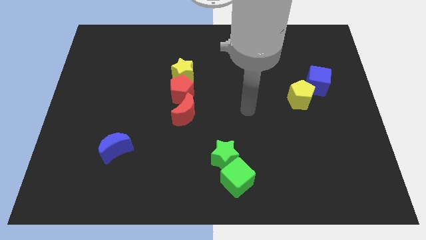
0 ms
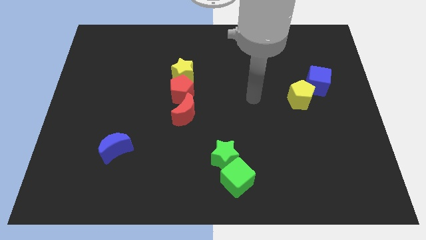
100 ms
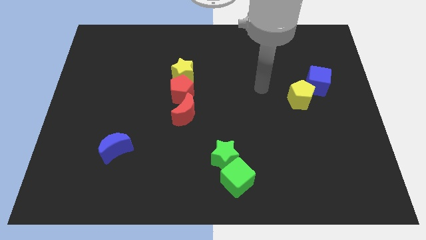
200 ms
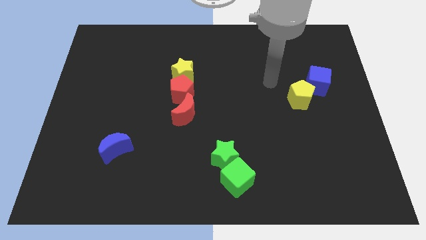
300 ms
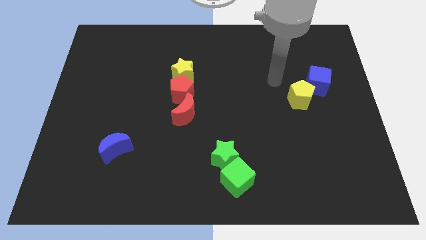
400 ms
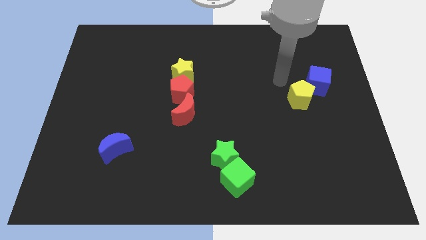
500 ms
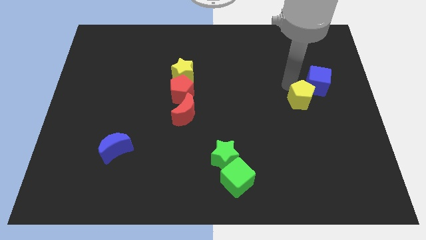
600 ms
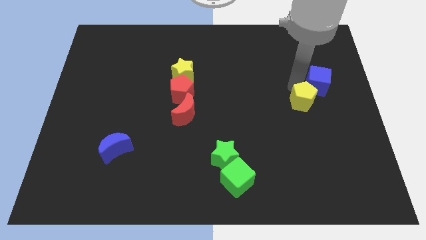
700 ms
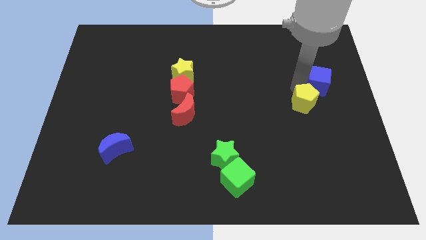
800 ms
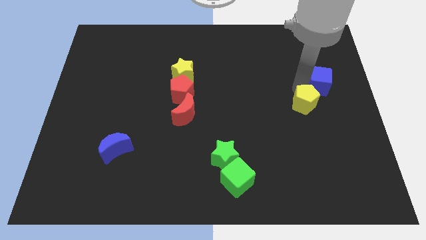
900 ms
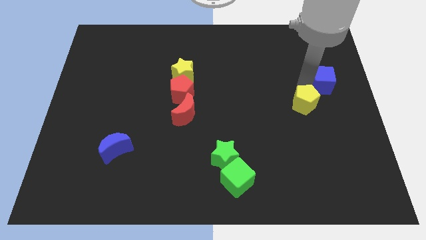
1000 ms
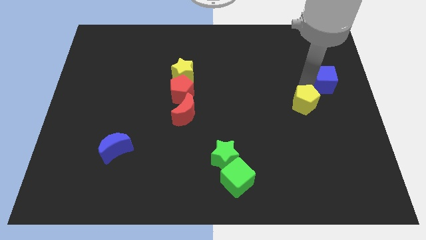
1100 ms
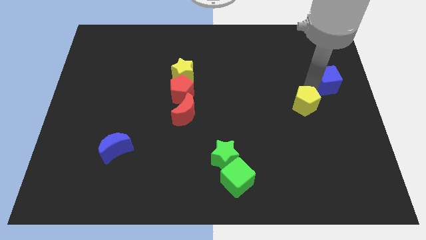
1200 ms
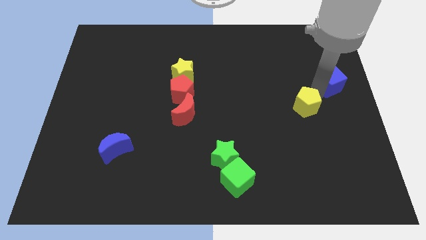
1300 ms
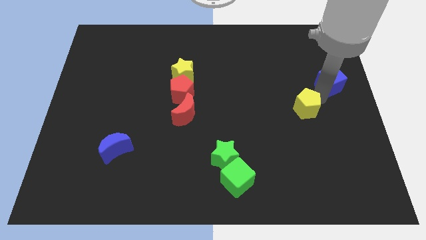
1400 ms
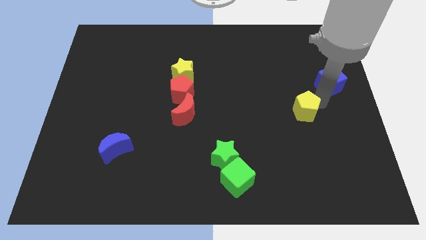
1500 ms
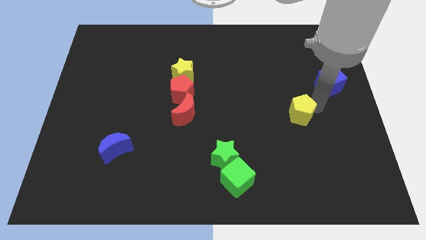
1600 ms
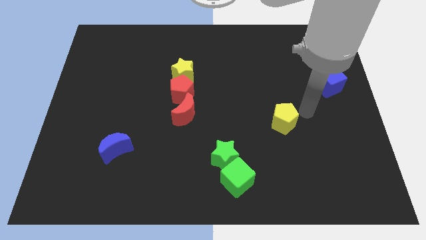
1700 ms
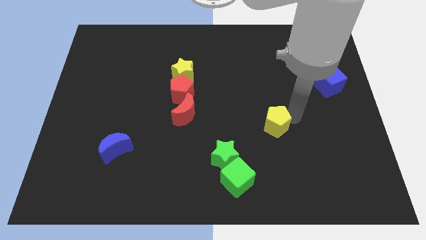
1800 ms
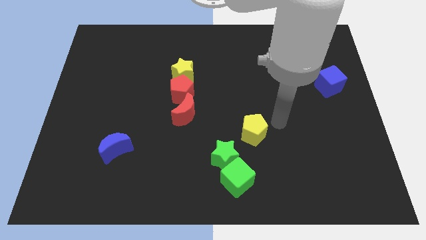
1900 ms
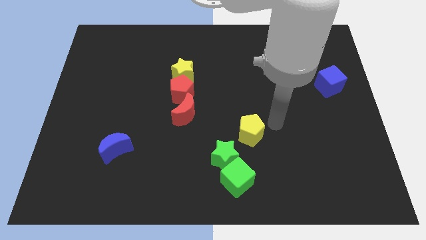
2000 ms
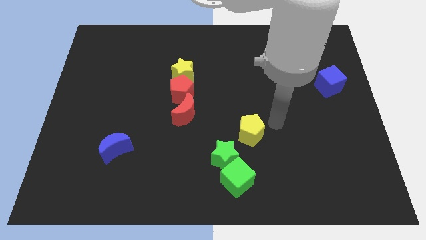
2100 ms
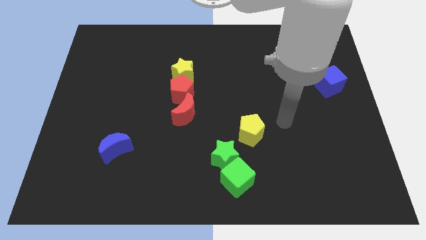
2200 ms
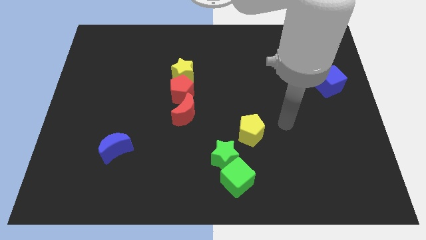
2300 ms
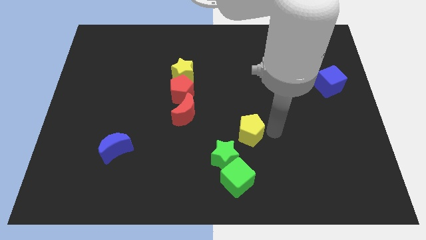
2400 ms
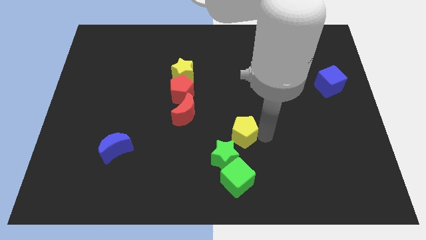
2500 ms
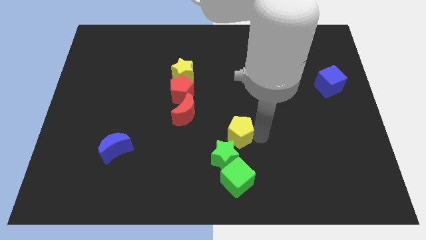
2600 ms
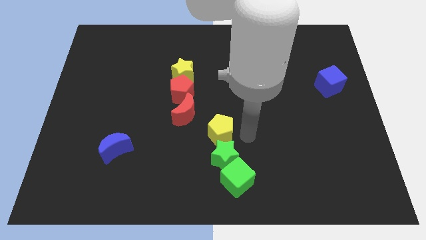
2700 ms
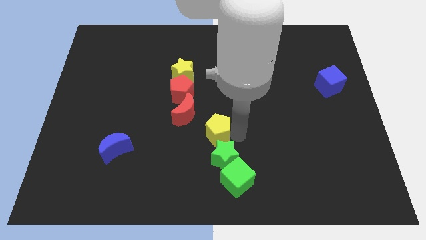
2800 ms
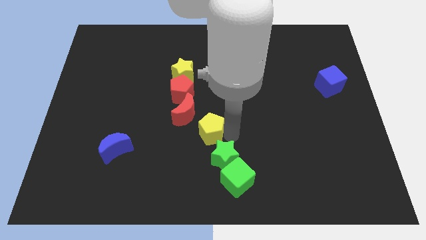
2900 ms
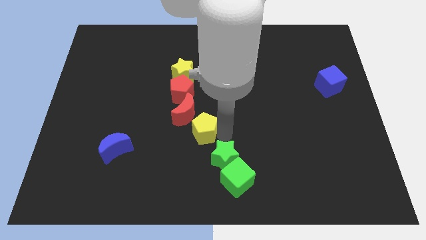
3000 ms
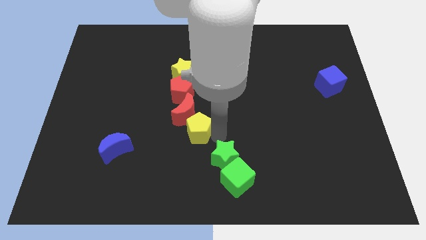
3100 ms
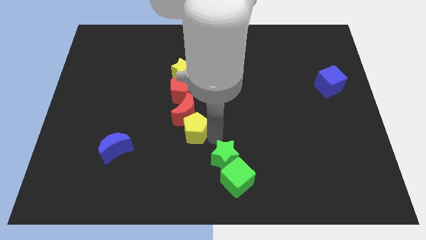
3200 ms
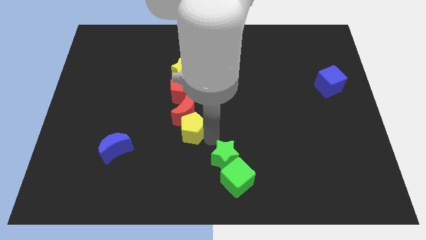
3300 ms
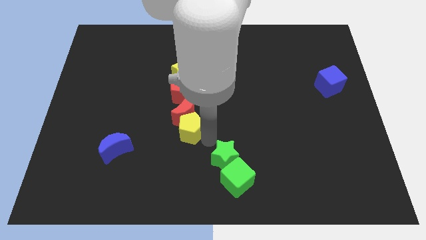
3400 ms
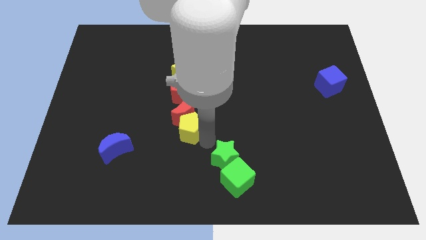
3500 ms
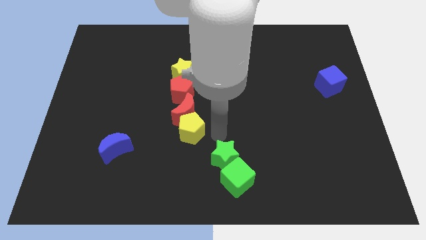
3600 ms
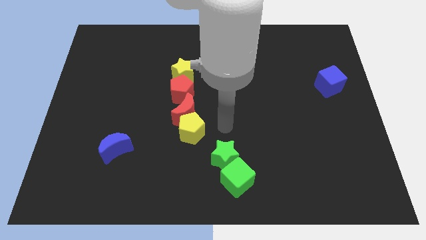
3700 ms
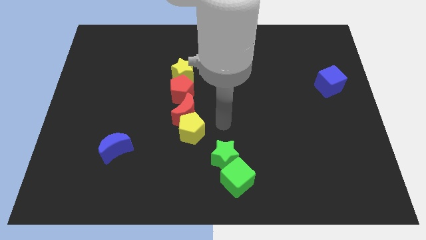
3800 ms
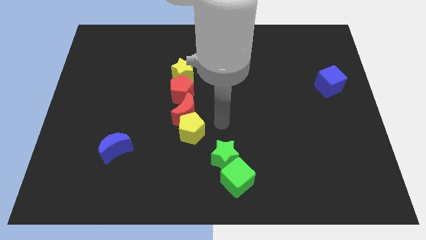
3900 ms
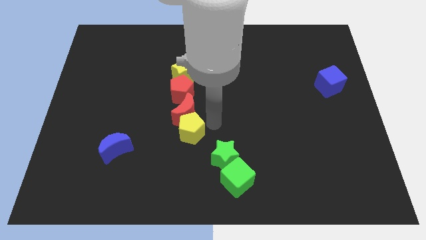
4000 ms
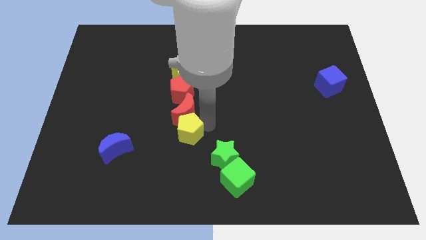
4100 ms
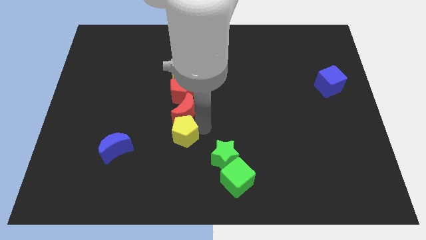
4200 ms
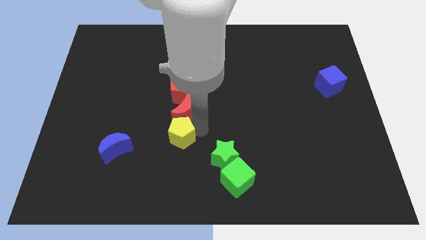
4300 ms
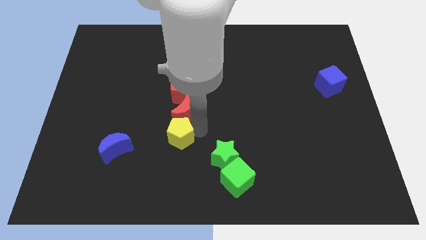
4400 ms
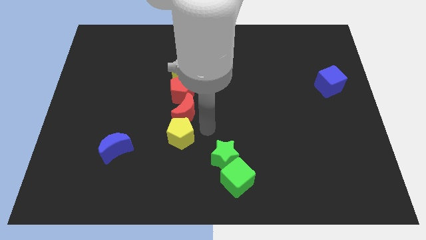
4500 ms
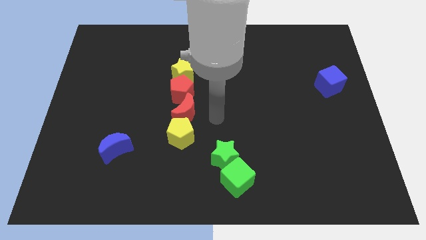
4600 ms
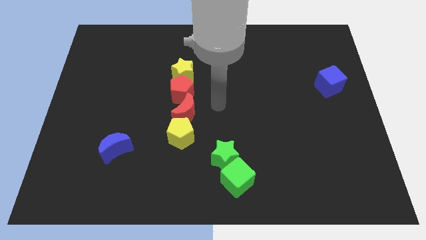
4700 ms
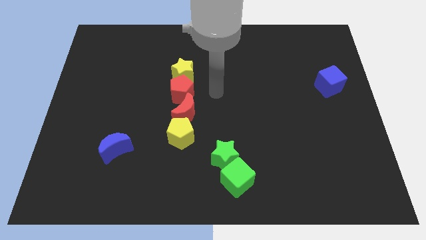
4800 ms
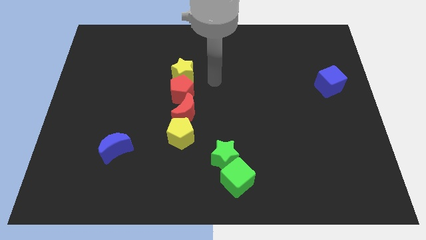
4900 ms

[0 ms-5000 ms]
move the yellow pentagon below to the red crescent

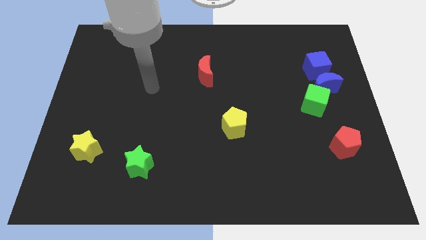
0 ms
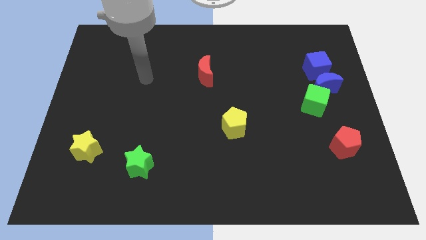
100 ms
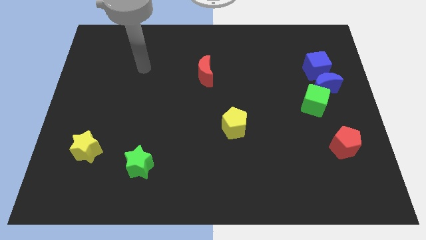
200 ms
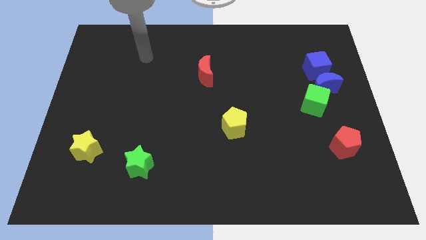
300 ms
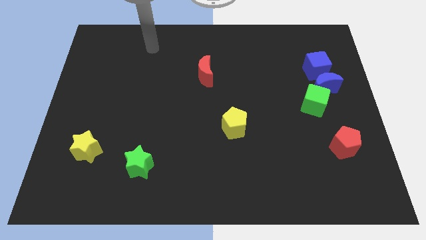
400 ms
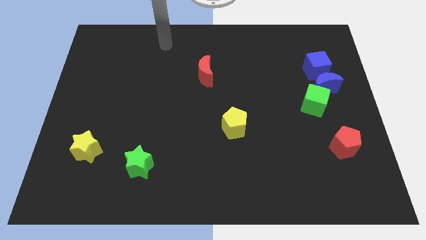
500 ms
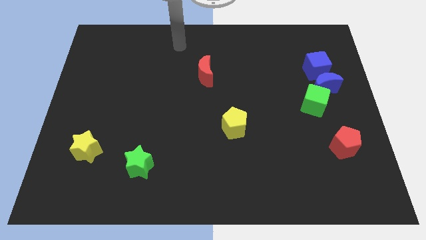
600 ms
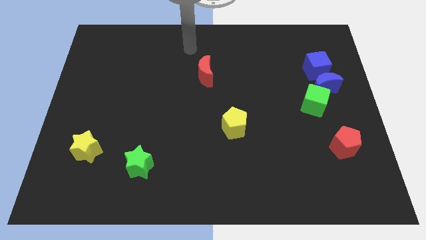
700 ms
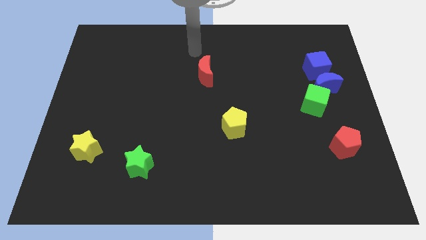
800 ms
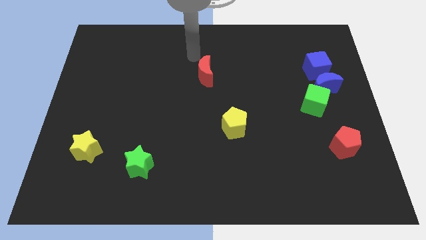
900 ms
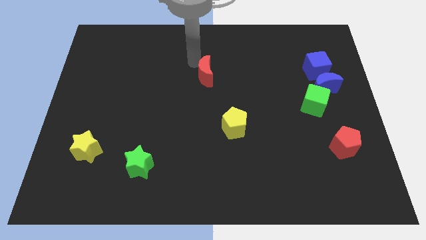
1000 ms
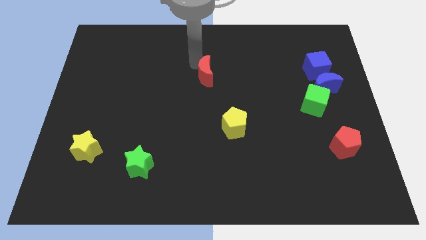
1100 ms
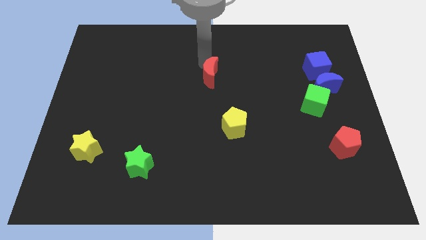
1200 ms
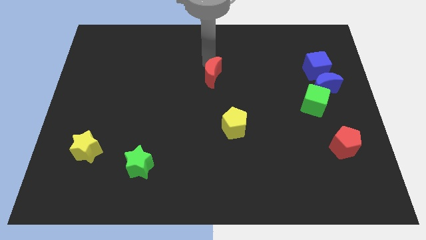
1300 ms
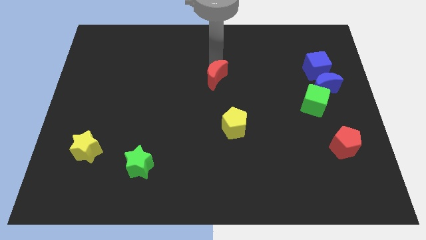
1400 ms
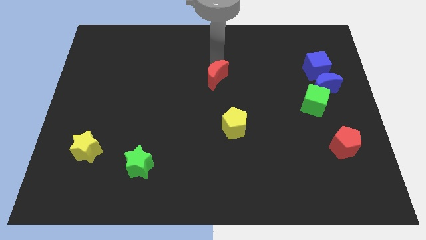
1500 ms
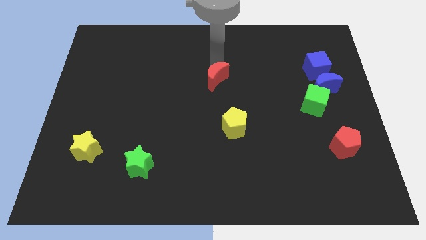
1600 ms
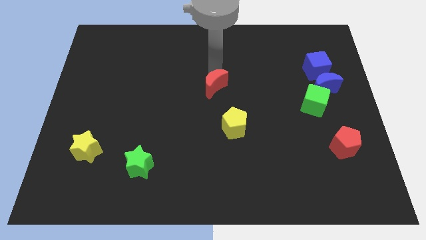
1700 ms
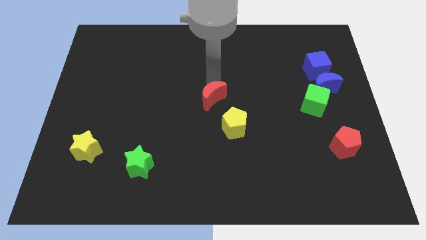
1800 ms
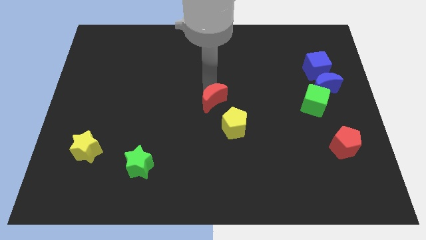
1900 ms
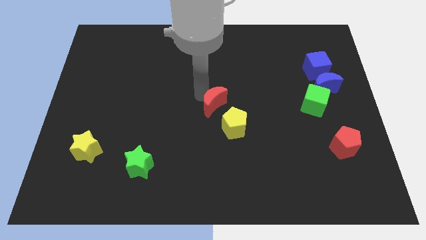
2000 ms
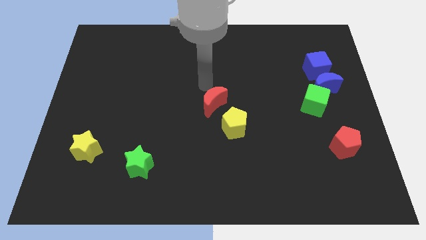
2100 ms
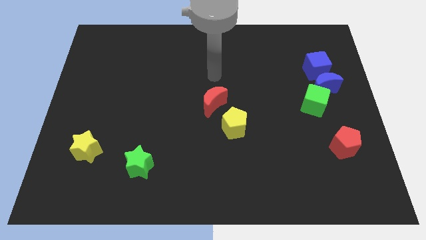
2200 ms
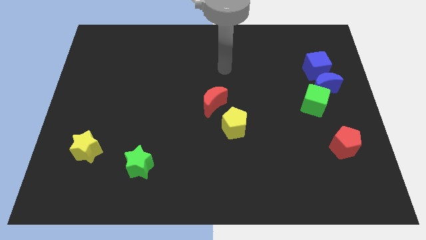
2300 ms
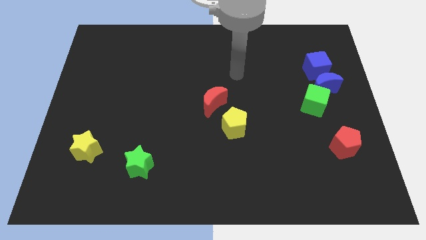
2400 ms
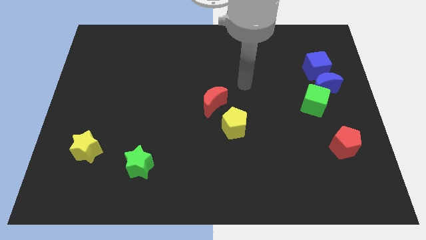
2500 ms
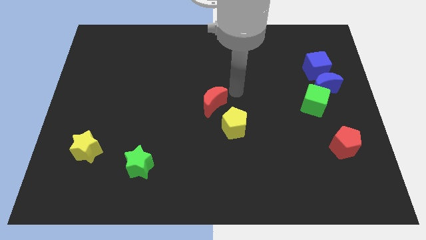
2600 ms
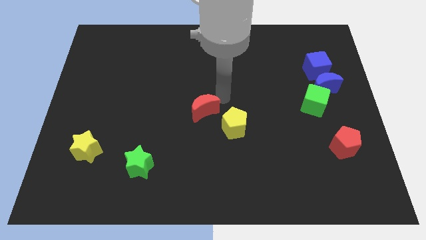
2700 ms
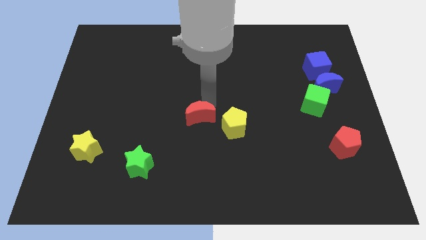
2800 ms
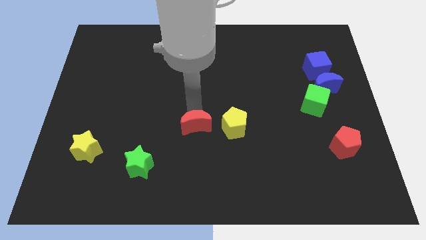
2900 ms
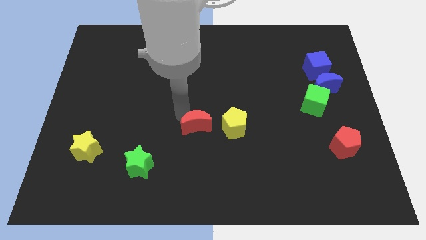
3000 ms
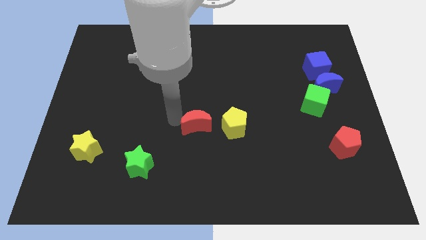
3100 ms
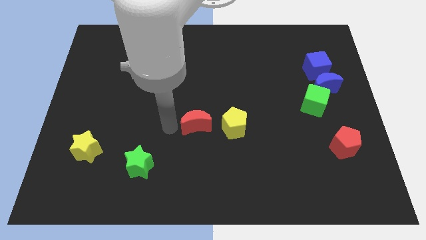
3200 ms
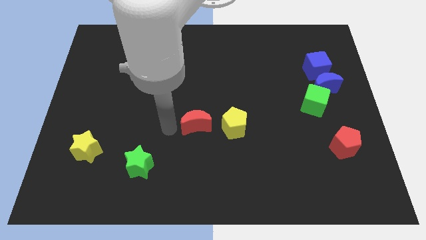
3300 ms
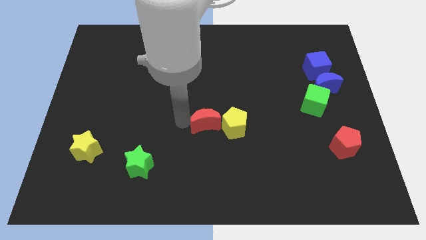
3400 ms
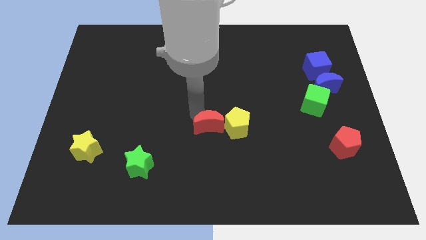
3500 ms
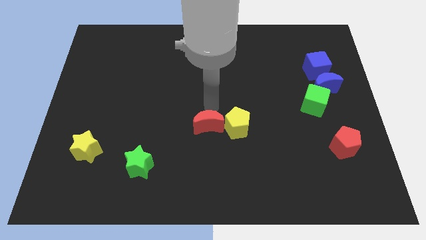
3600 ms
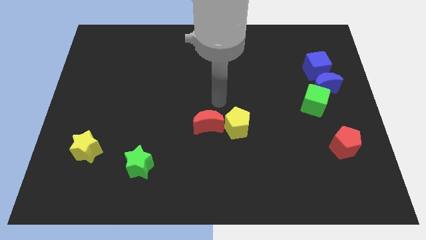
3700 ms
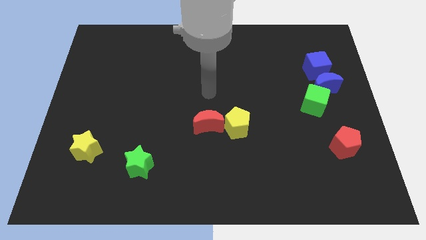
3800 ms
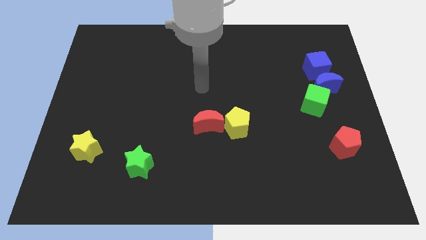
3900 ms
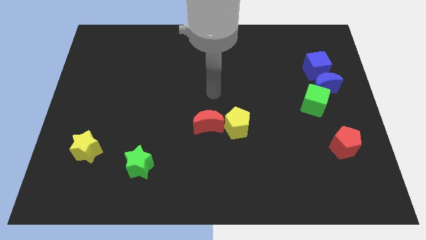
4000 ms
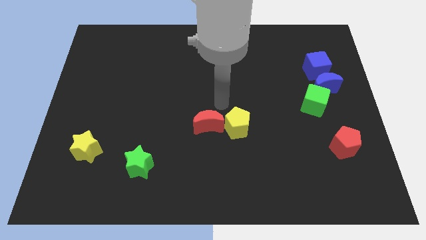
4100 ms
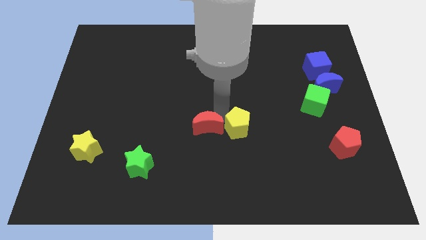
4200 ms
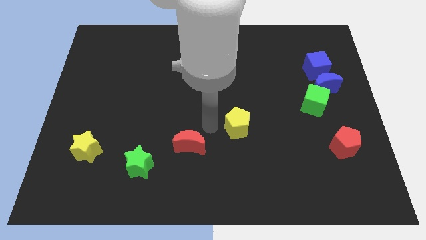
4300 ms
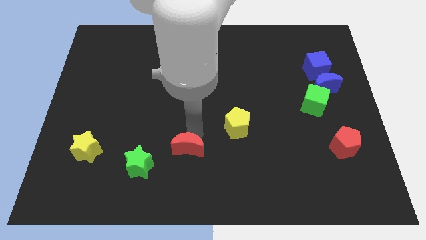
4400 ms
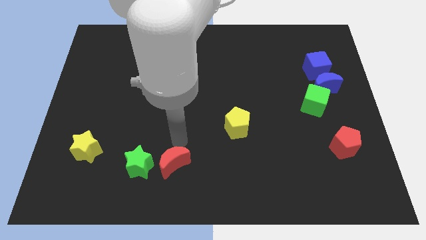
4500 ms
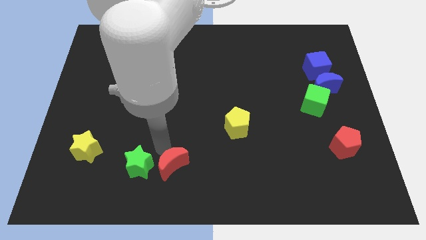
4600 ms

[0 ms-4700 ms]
push the red moon downward
